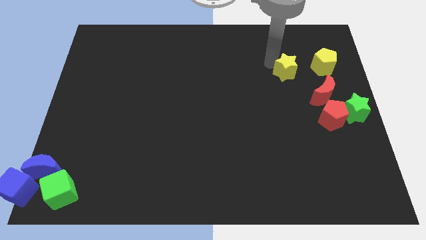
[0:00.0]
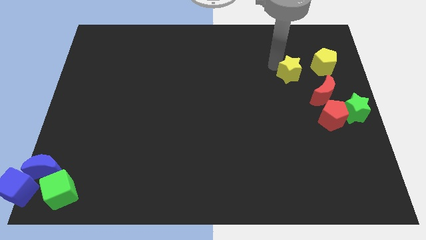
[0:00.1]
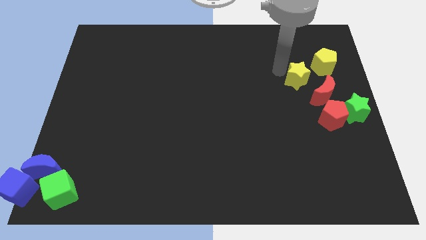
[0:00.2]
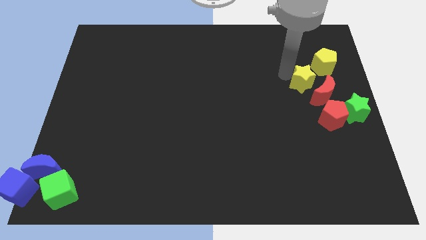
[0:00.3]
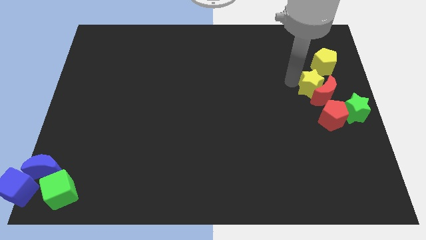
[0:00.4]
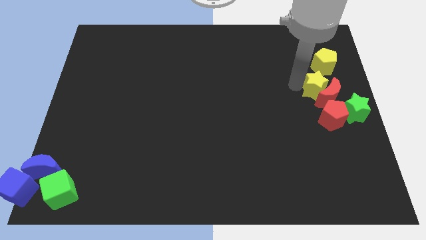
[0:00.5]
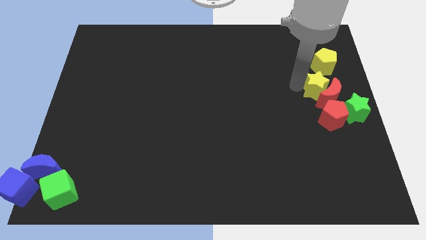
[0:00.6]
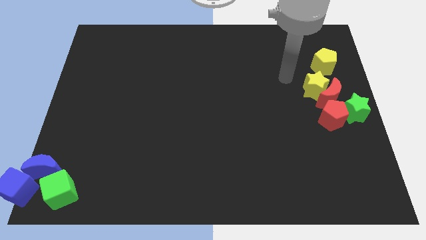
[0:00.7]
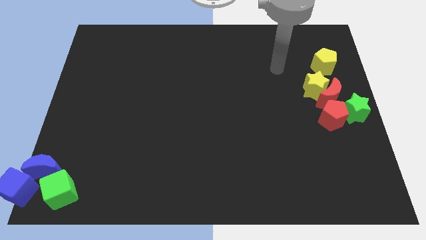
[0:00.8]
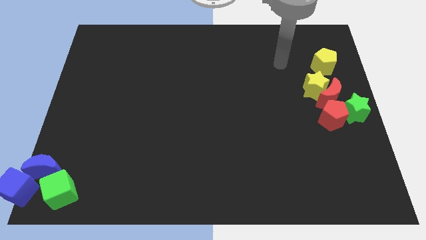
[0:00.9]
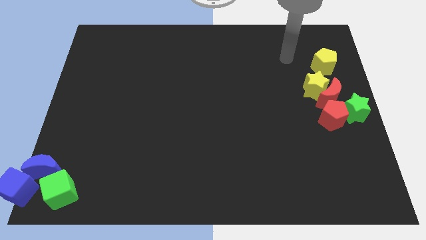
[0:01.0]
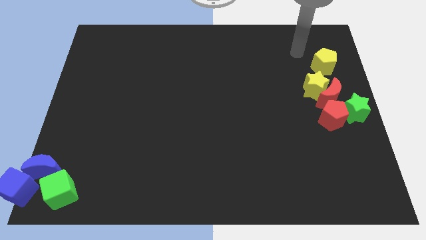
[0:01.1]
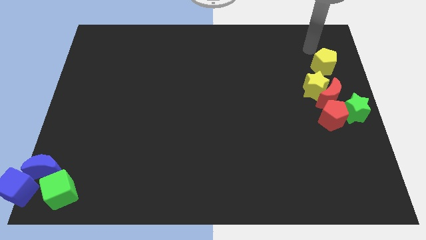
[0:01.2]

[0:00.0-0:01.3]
move the yellow star into red moon

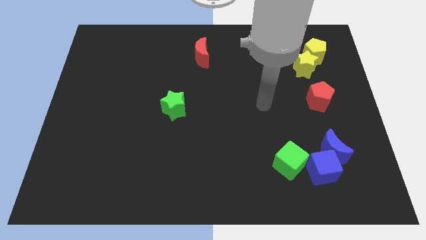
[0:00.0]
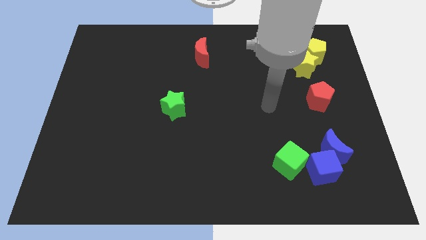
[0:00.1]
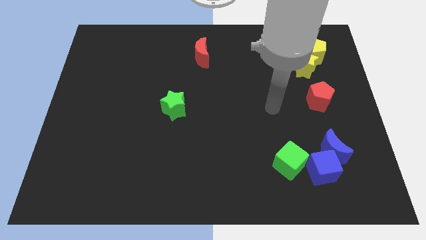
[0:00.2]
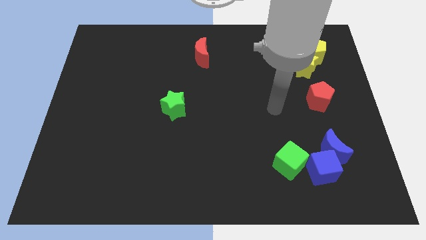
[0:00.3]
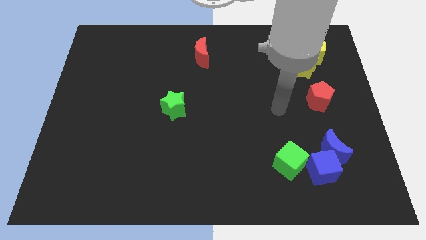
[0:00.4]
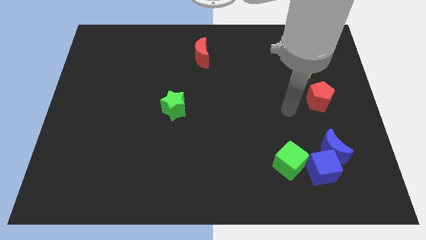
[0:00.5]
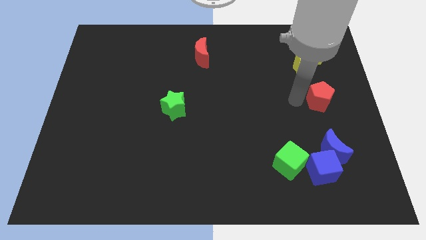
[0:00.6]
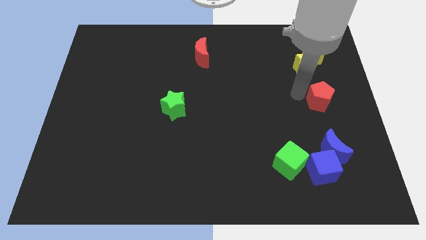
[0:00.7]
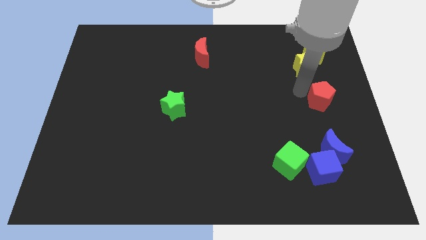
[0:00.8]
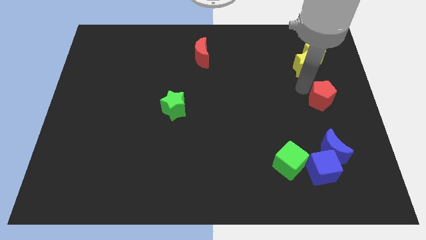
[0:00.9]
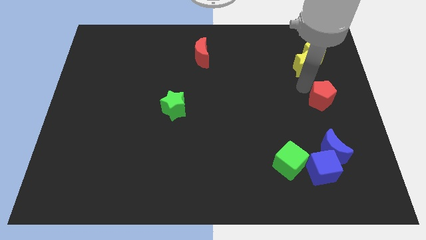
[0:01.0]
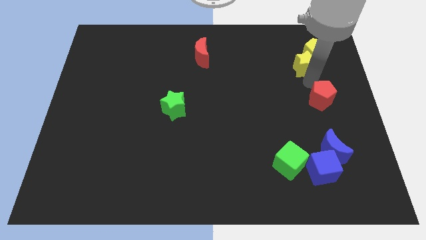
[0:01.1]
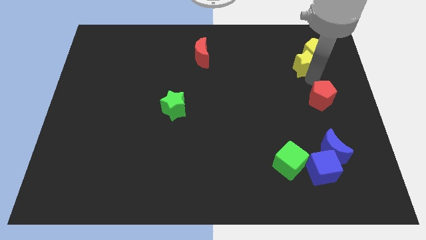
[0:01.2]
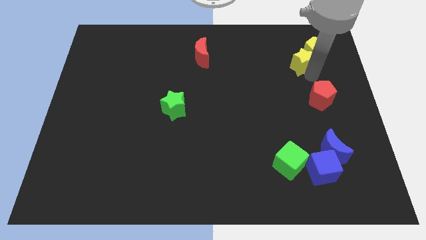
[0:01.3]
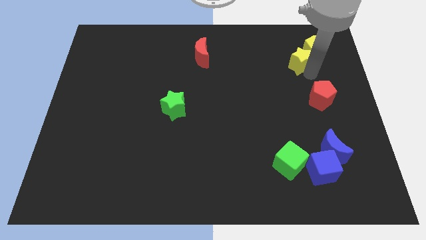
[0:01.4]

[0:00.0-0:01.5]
point your arm right to yellow star

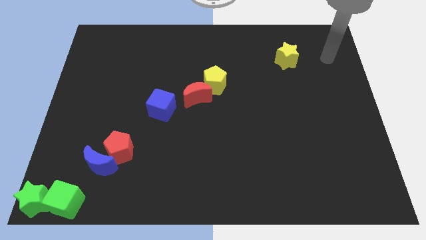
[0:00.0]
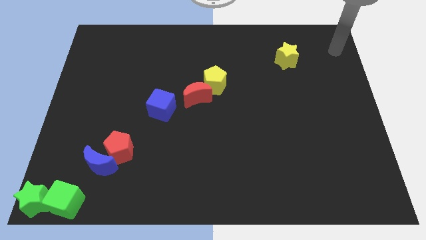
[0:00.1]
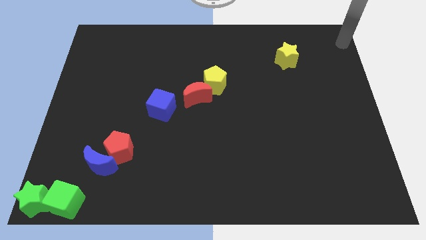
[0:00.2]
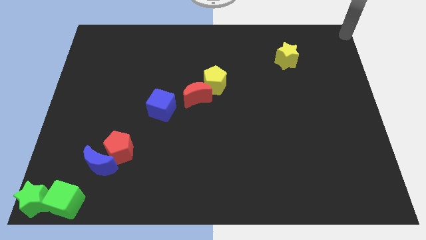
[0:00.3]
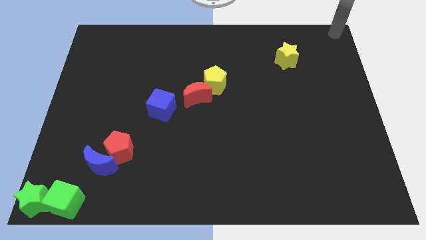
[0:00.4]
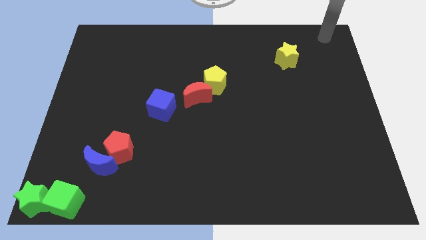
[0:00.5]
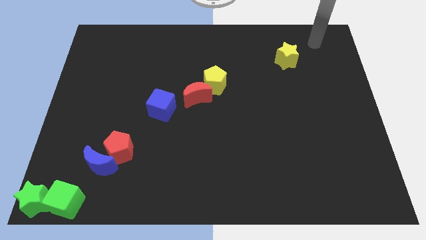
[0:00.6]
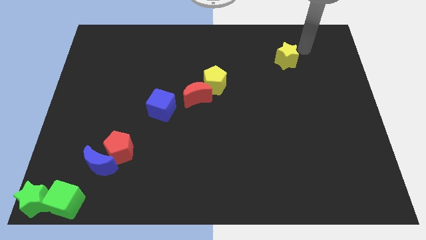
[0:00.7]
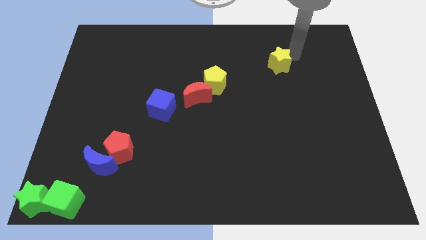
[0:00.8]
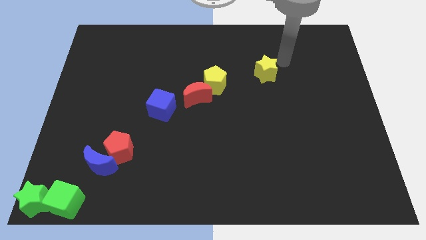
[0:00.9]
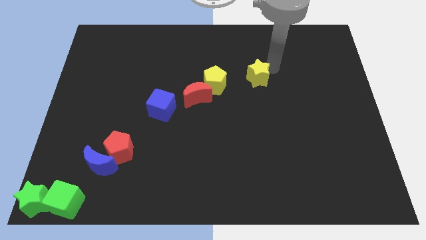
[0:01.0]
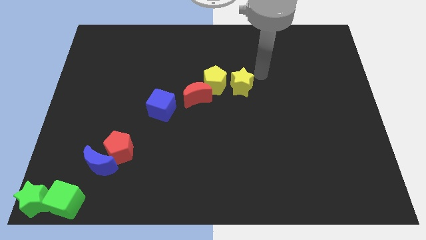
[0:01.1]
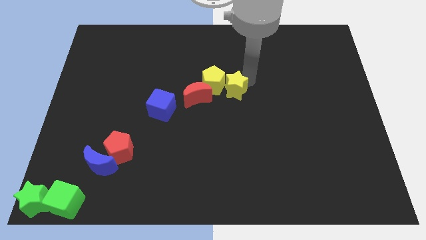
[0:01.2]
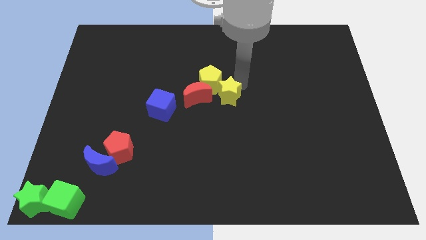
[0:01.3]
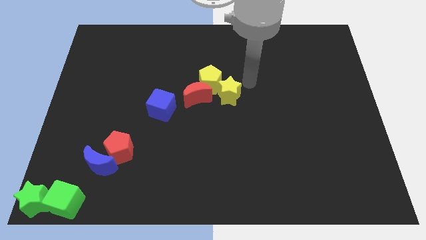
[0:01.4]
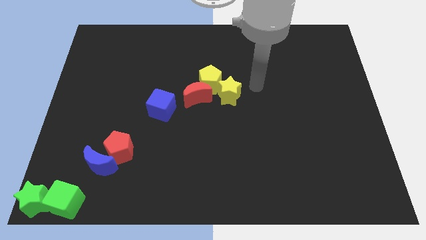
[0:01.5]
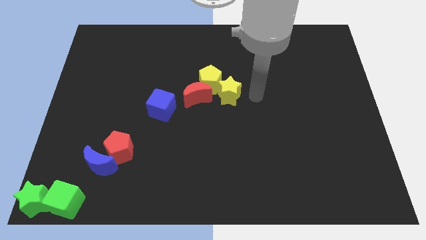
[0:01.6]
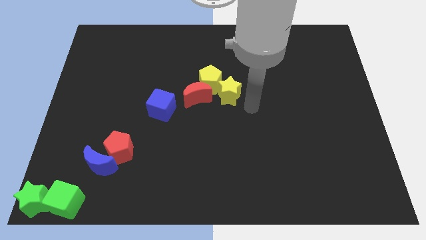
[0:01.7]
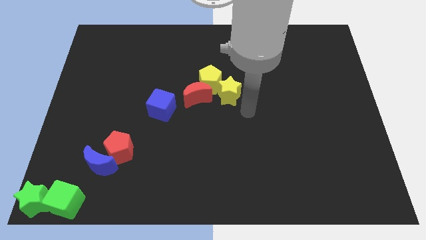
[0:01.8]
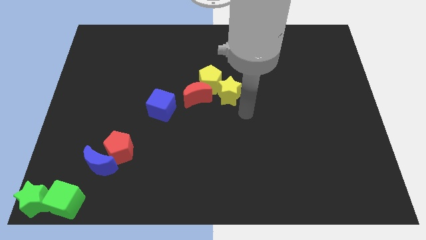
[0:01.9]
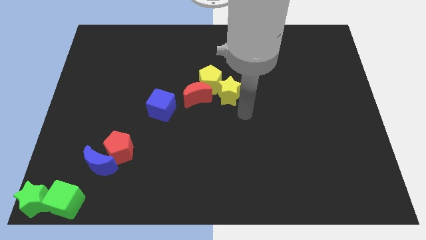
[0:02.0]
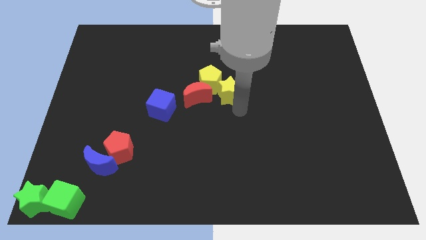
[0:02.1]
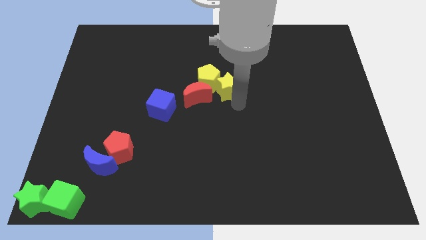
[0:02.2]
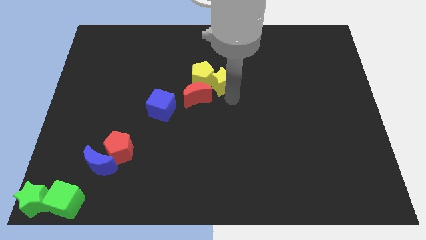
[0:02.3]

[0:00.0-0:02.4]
place the yellow star near yellow pentagon and red moon

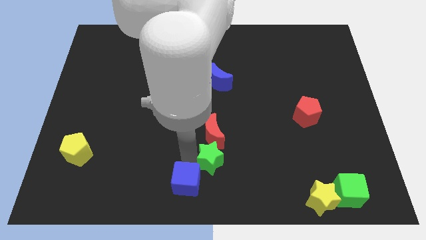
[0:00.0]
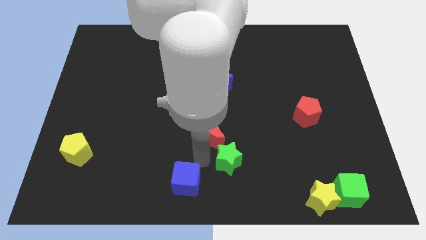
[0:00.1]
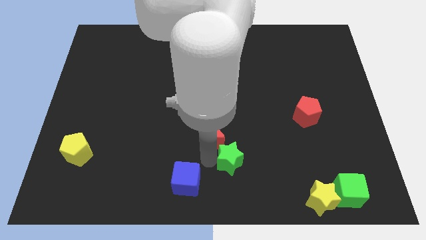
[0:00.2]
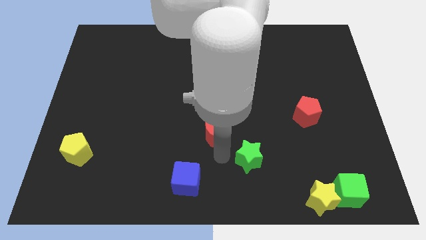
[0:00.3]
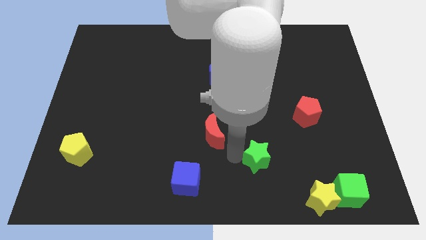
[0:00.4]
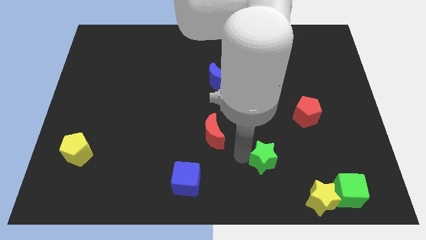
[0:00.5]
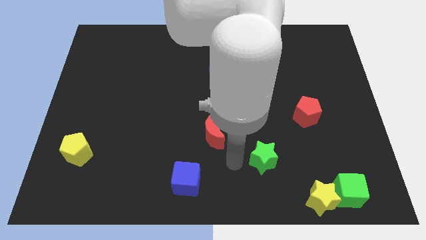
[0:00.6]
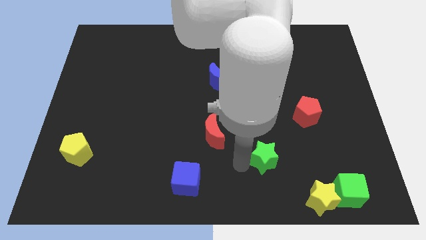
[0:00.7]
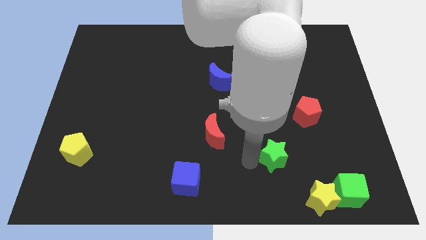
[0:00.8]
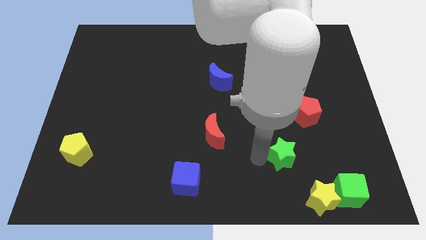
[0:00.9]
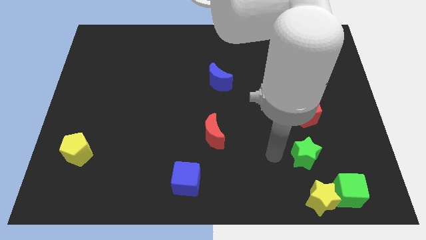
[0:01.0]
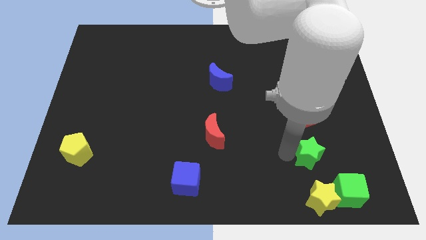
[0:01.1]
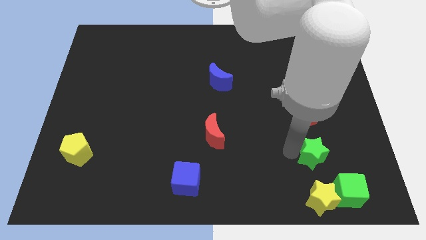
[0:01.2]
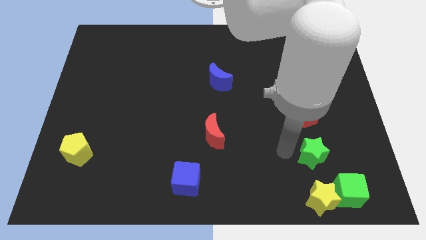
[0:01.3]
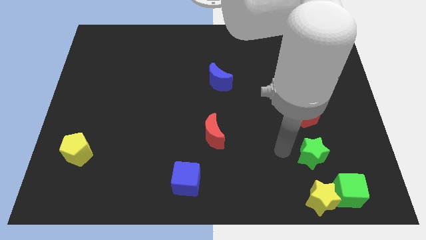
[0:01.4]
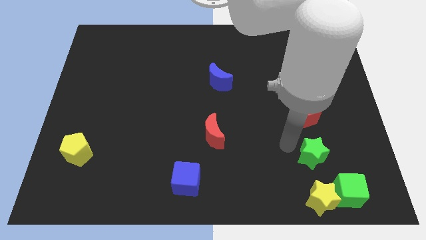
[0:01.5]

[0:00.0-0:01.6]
move the green star to the bottom of the red pentagon

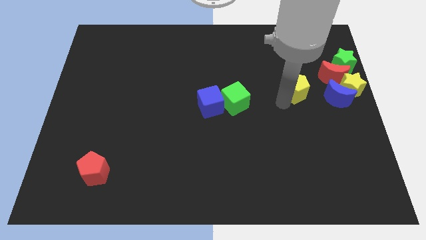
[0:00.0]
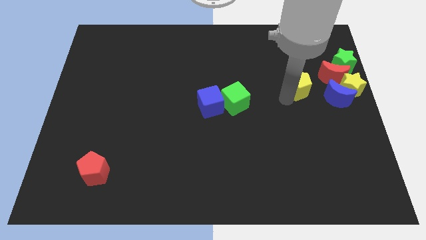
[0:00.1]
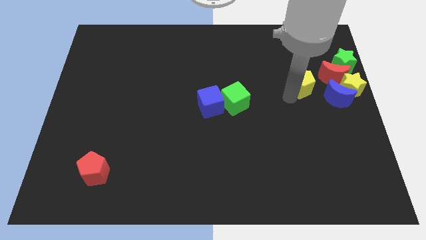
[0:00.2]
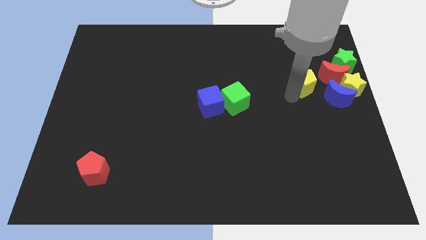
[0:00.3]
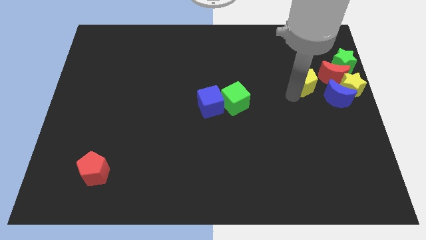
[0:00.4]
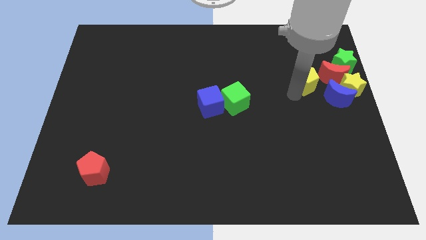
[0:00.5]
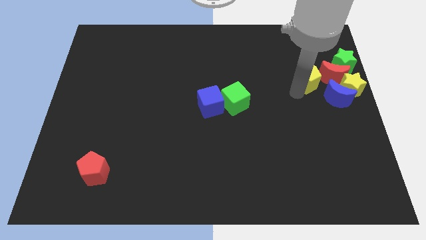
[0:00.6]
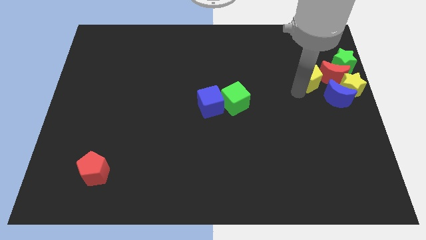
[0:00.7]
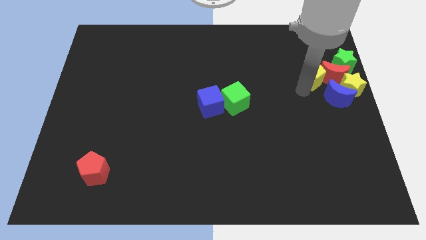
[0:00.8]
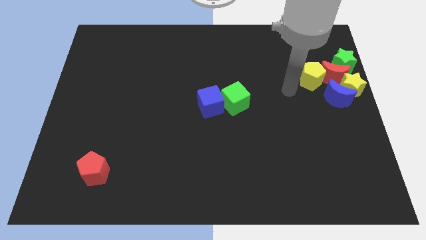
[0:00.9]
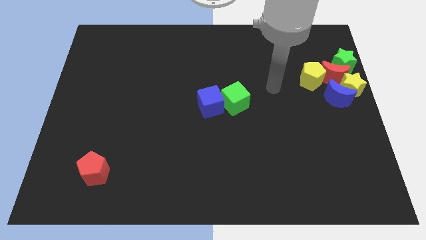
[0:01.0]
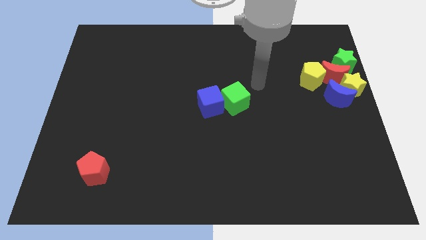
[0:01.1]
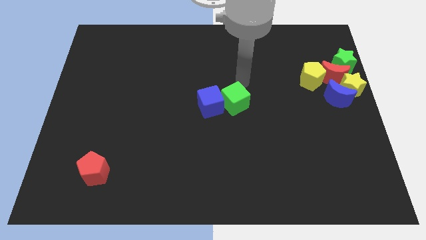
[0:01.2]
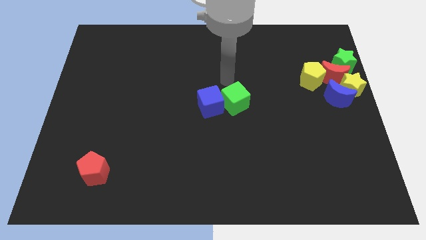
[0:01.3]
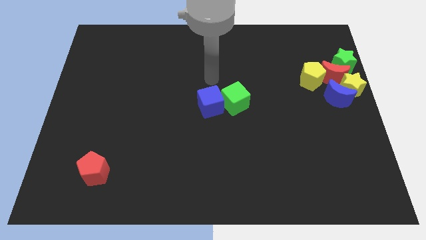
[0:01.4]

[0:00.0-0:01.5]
push the yellow pentagon into the red moon

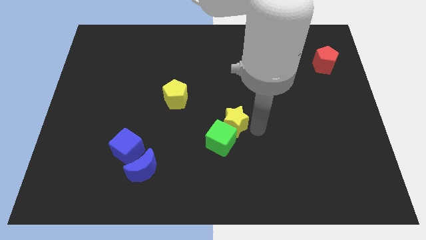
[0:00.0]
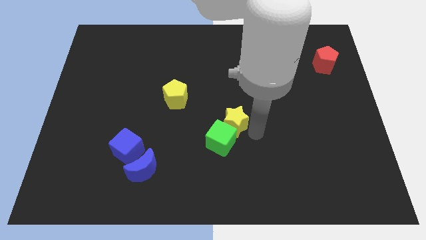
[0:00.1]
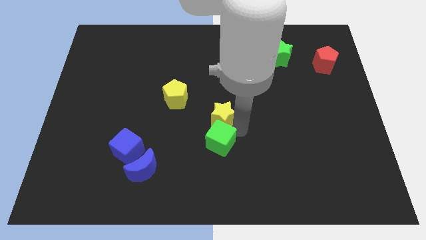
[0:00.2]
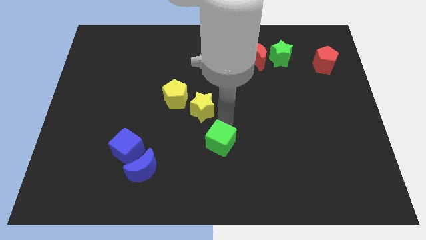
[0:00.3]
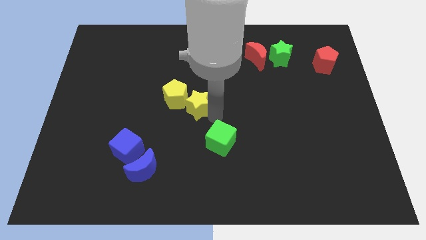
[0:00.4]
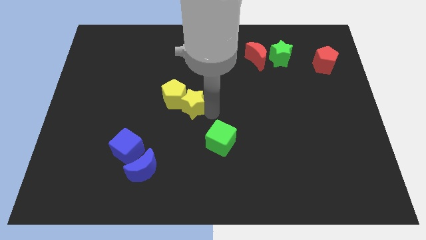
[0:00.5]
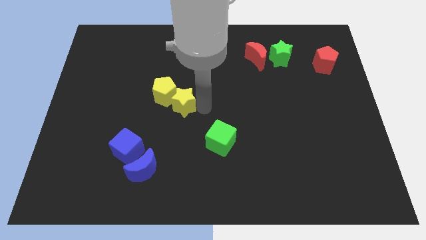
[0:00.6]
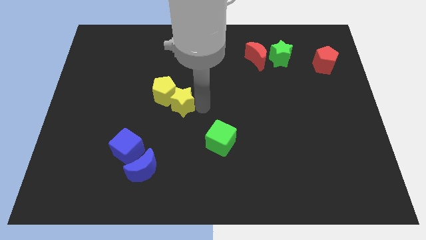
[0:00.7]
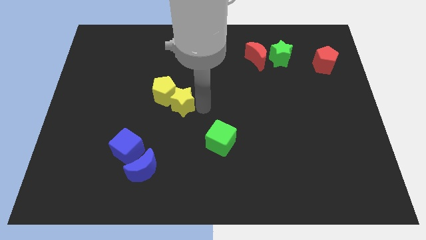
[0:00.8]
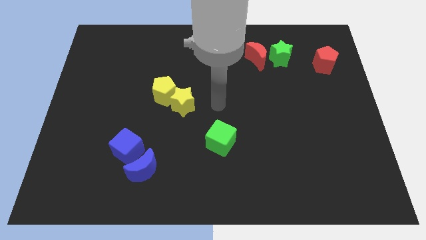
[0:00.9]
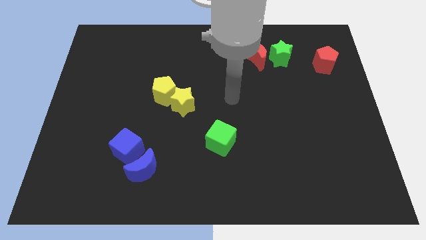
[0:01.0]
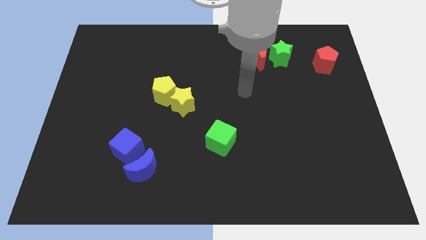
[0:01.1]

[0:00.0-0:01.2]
push the yellow star parallel to the red moon
